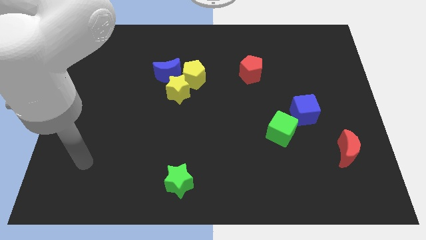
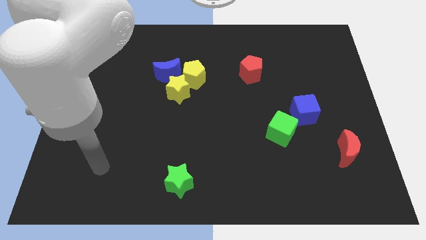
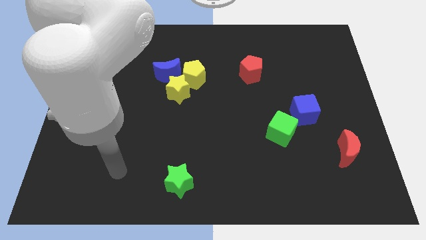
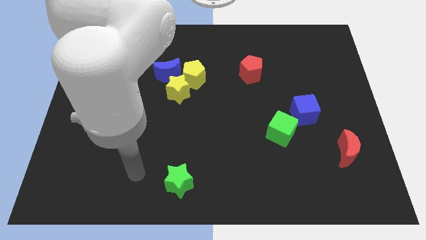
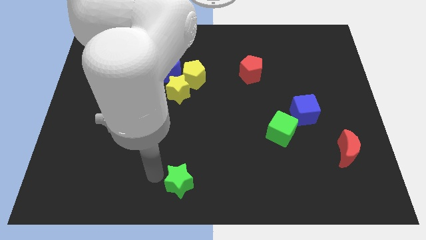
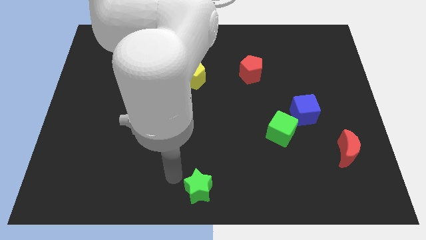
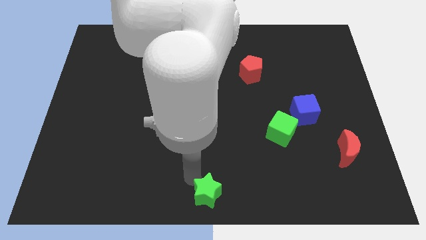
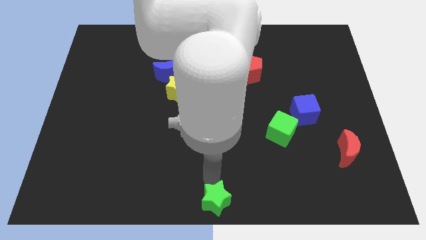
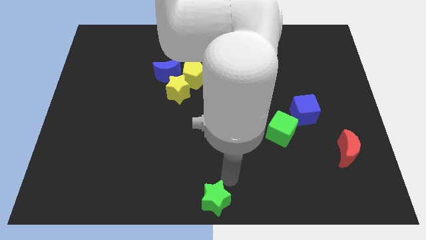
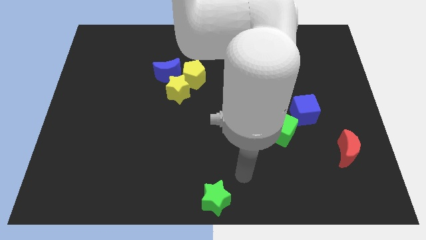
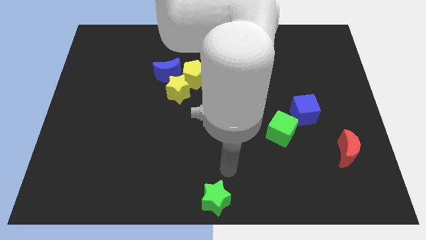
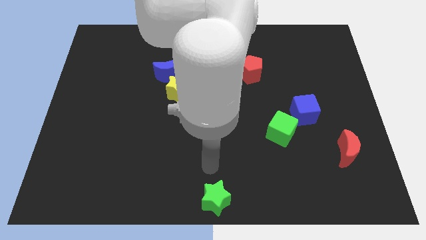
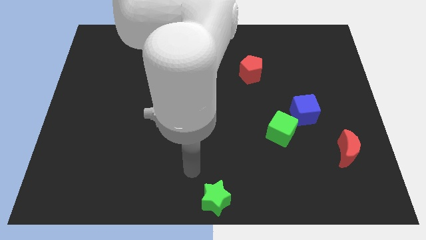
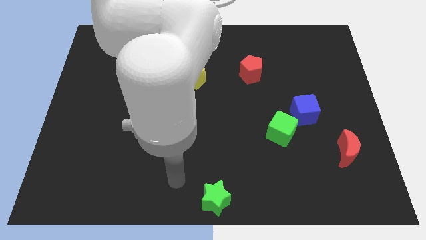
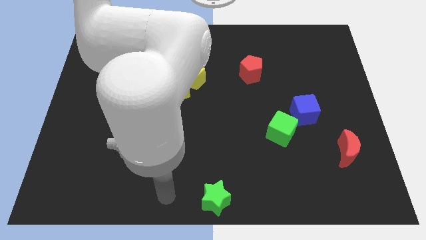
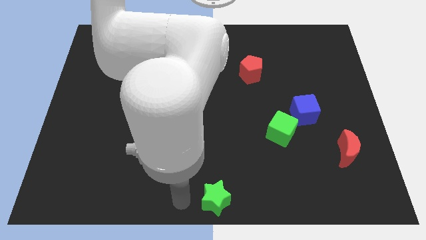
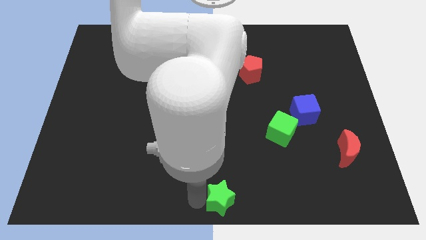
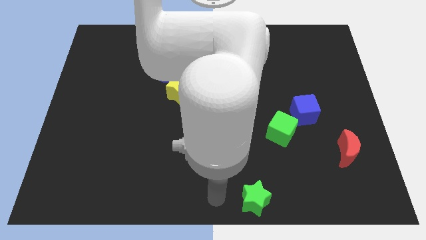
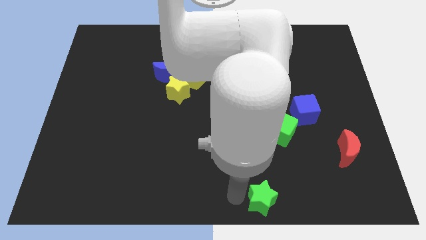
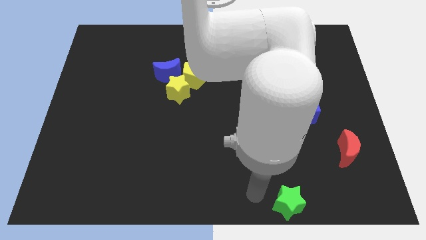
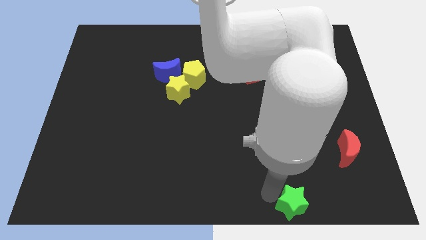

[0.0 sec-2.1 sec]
place the green star vertically below the green cube

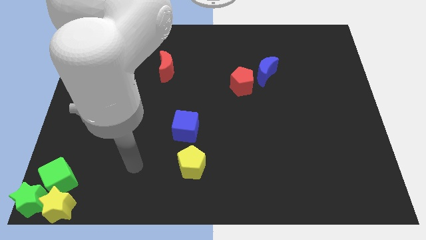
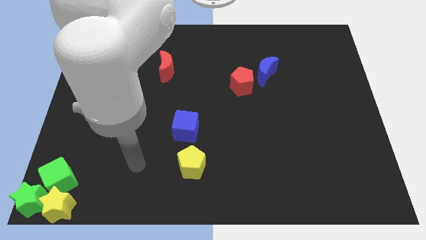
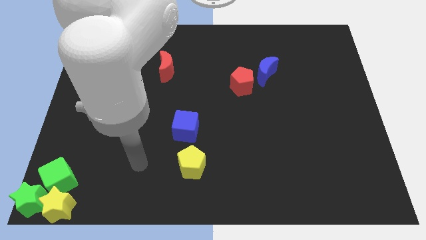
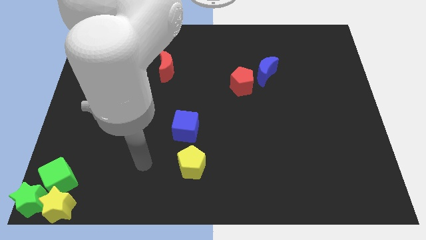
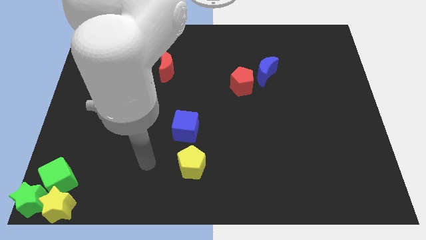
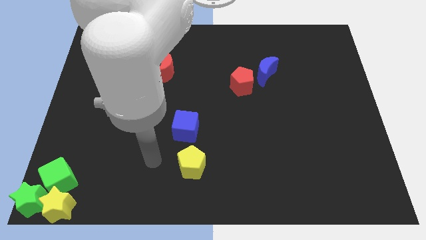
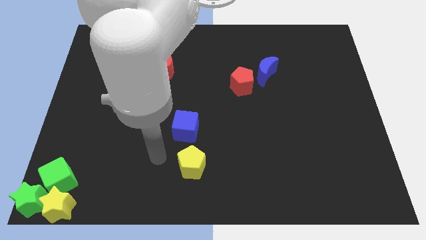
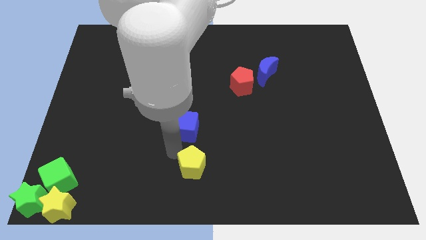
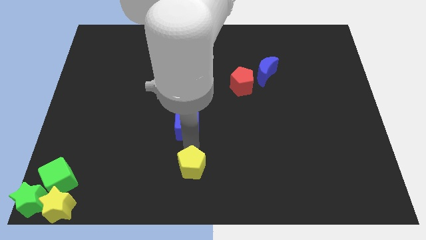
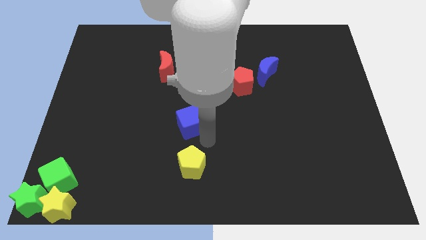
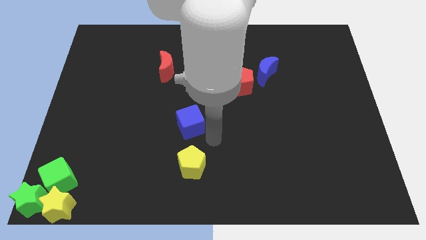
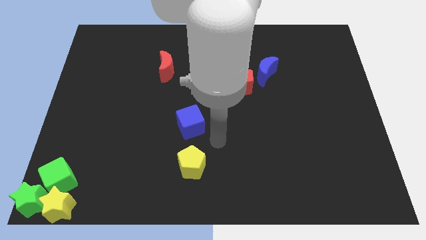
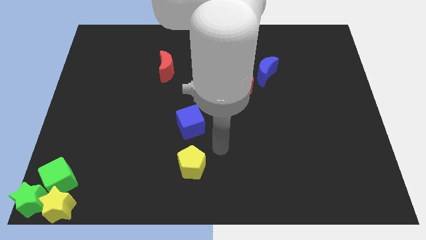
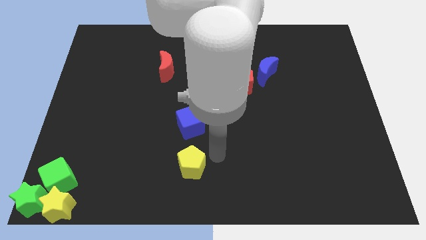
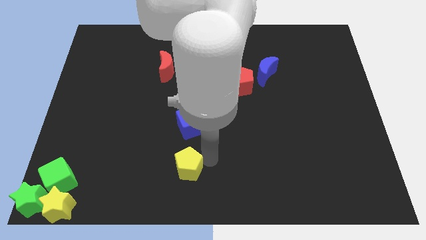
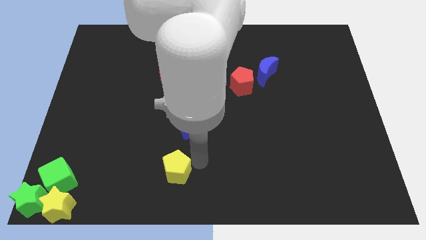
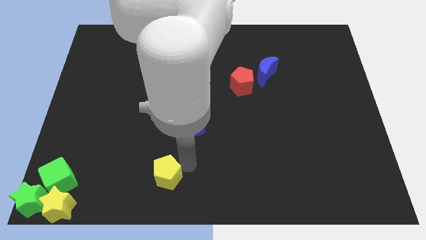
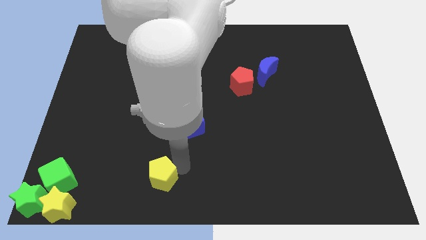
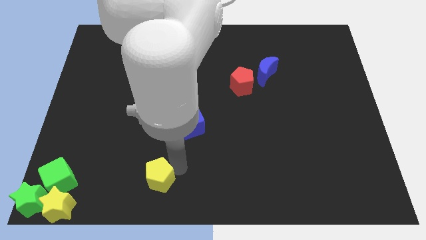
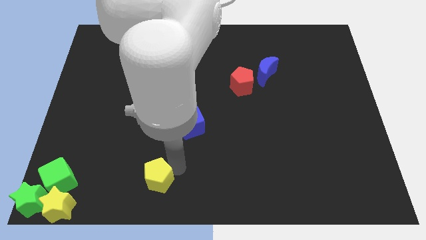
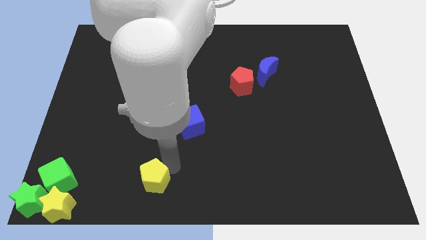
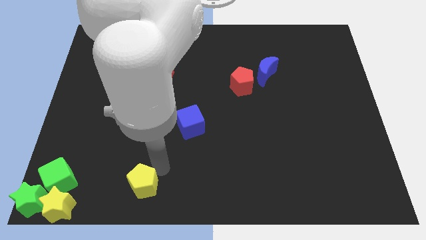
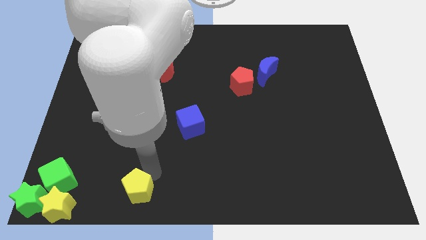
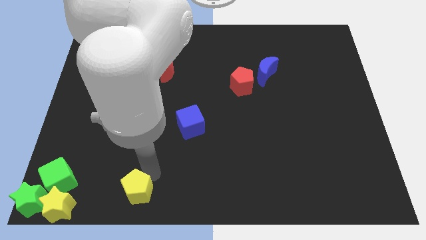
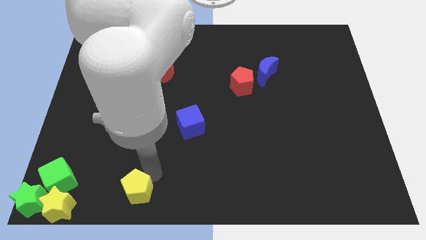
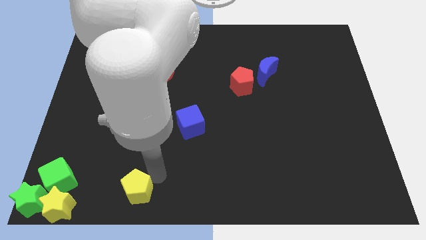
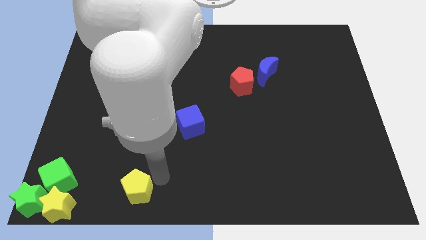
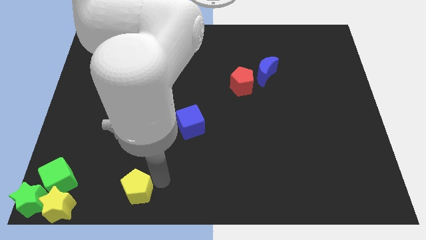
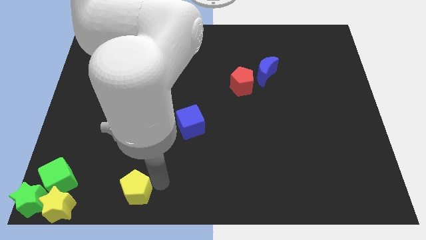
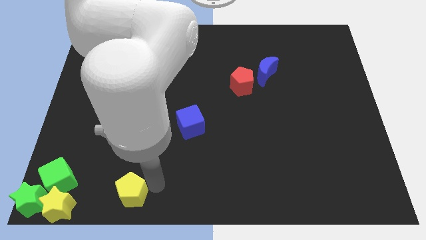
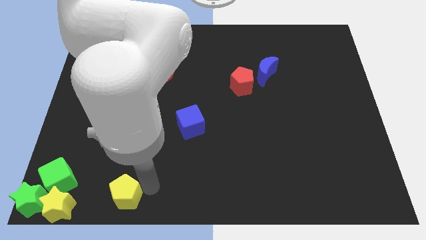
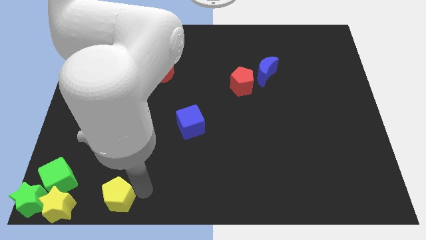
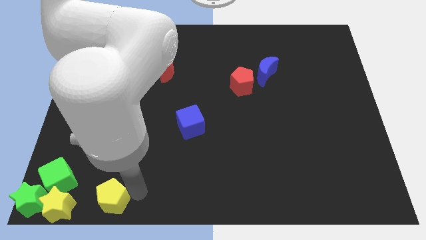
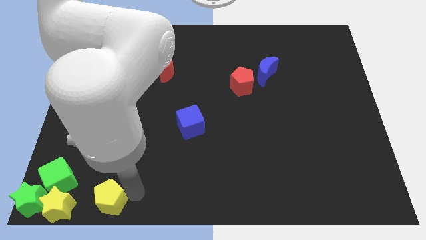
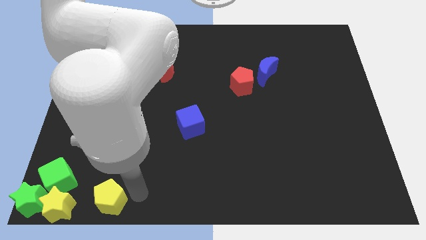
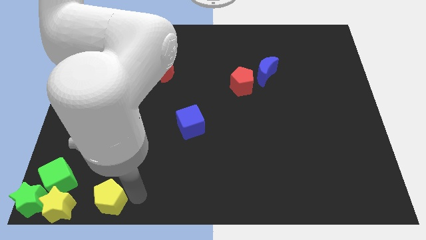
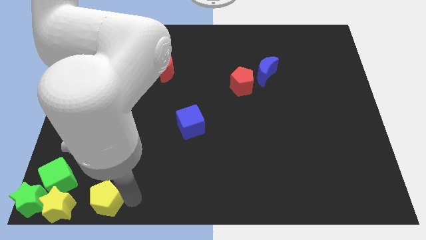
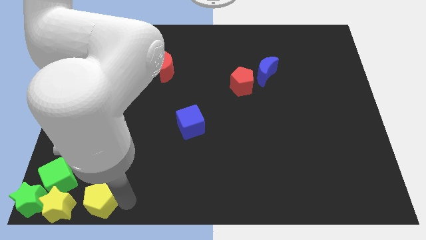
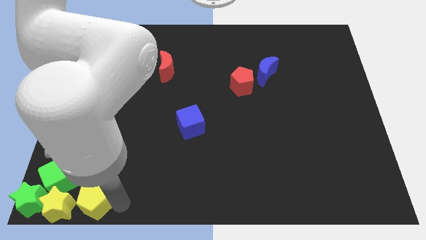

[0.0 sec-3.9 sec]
slide the yellow pentagon close to the yellow star

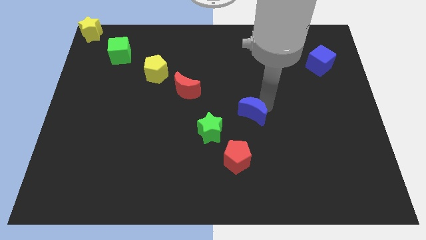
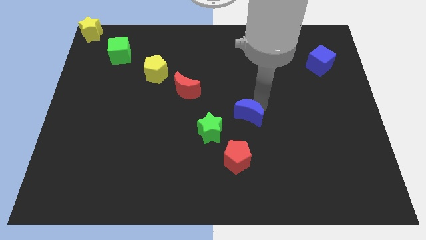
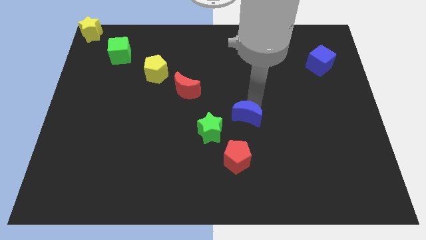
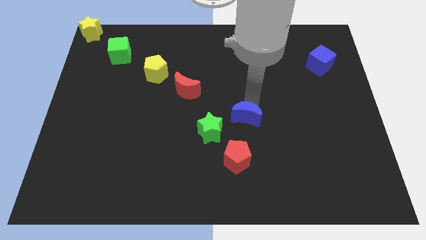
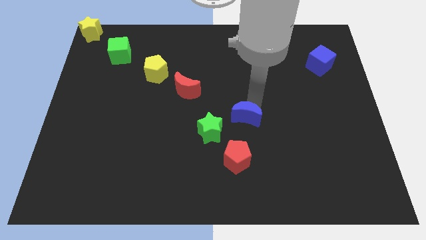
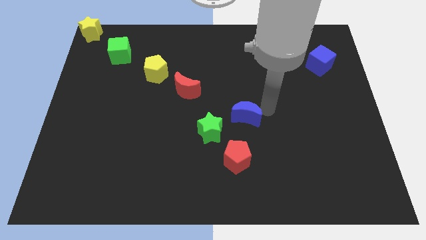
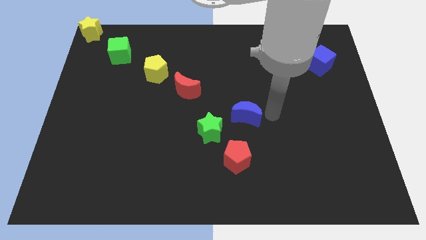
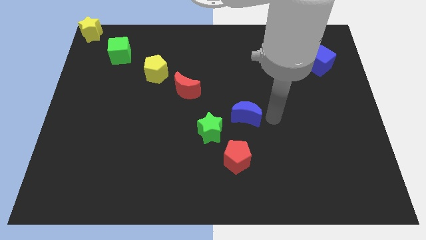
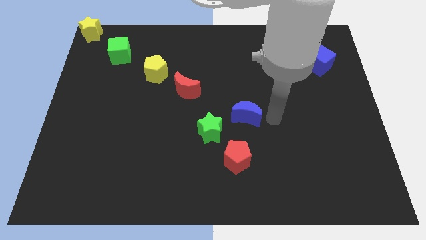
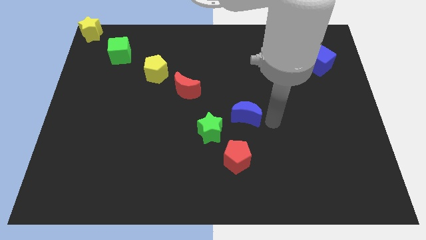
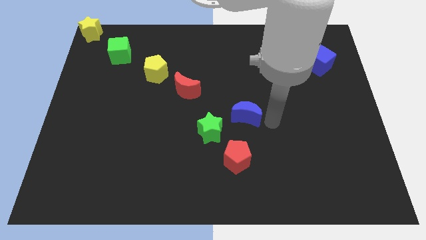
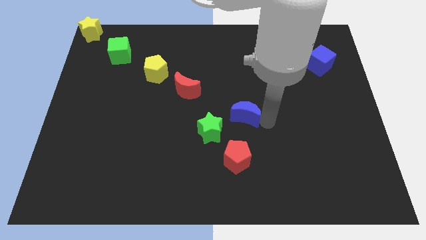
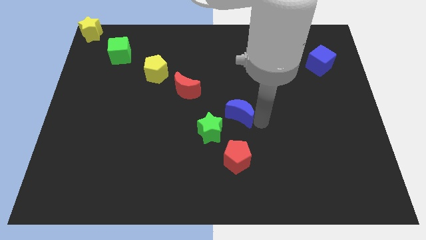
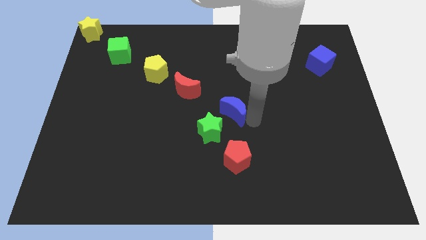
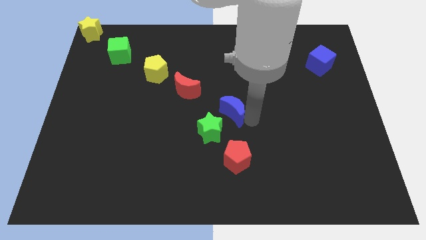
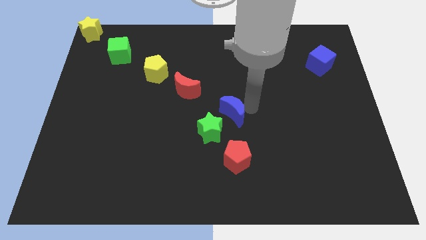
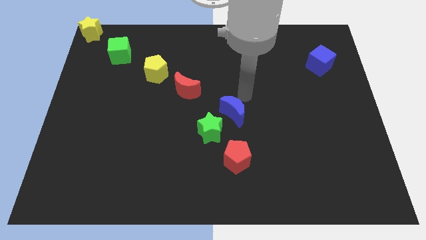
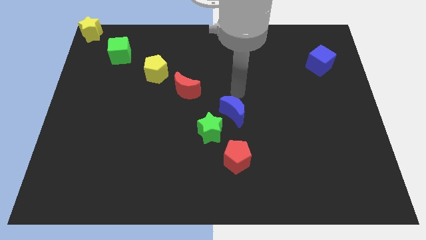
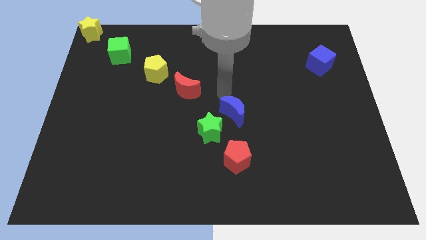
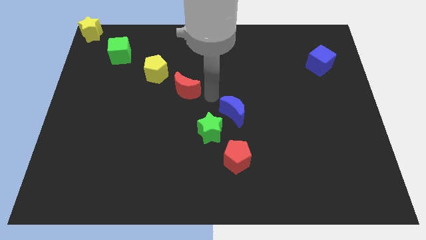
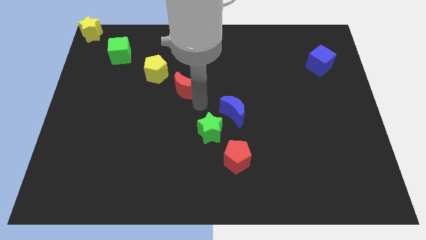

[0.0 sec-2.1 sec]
move blue moon close to the green star

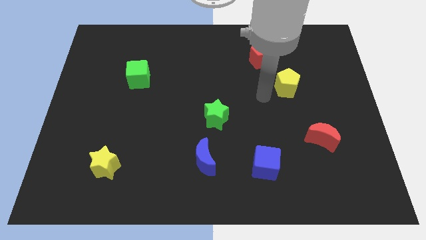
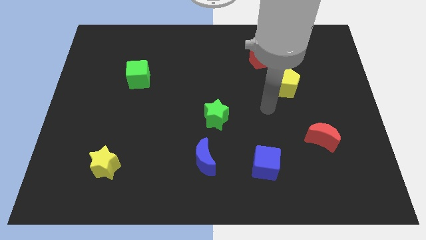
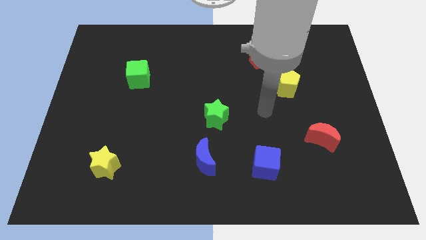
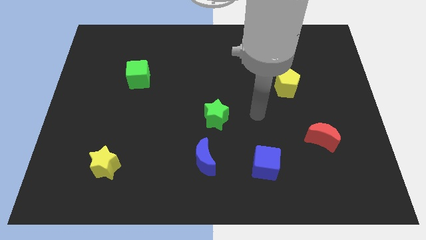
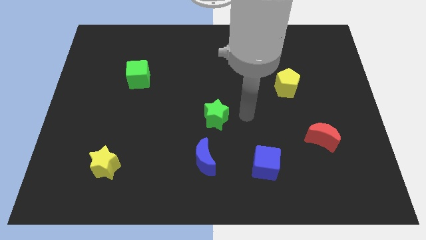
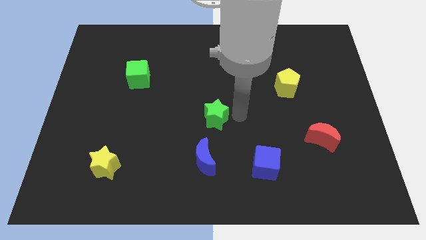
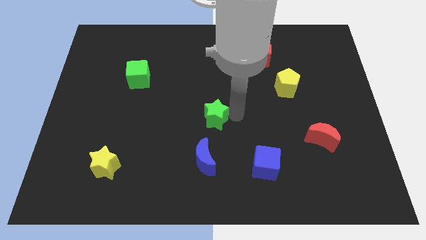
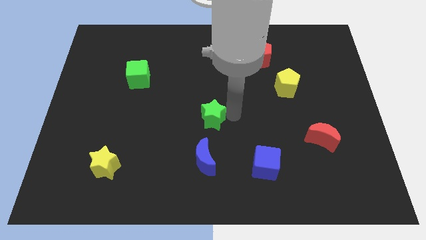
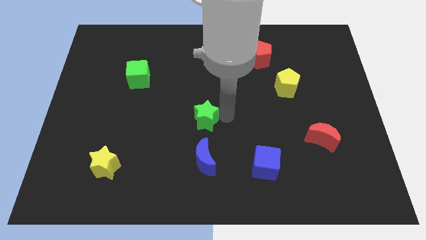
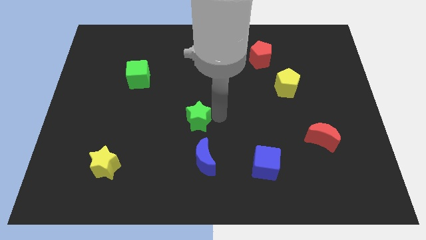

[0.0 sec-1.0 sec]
adjust green star above blue moon
